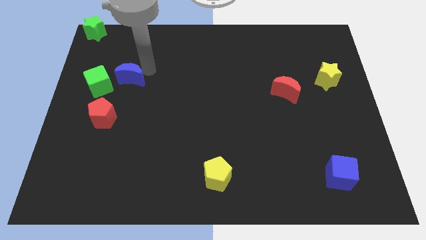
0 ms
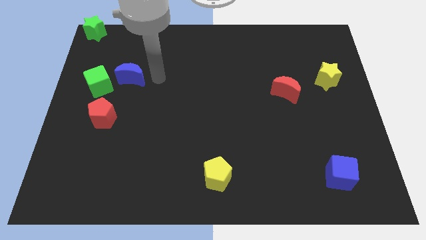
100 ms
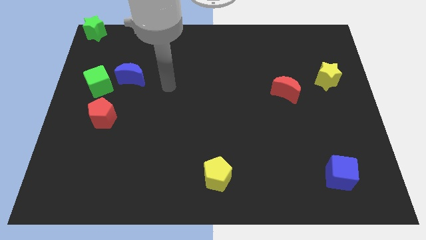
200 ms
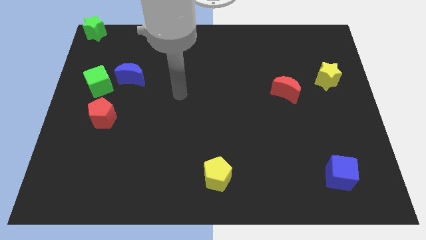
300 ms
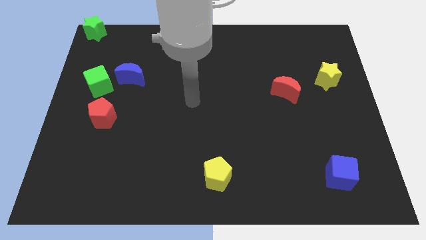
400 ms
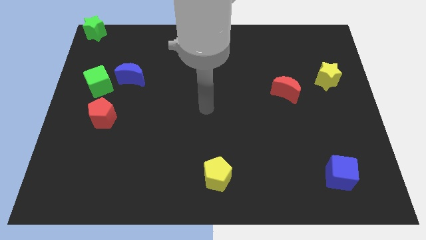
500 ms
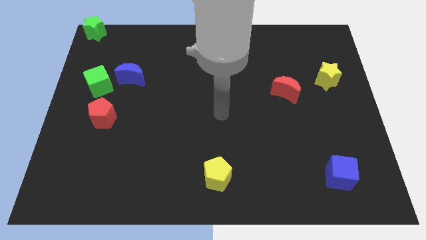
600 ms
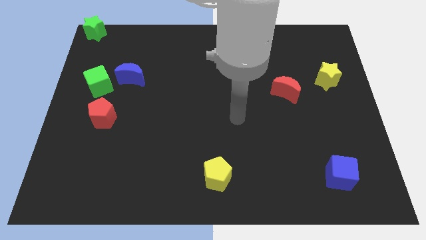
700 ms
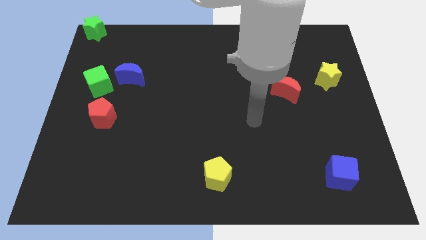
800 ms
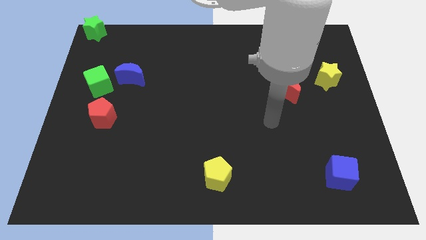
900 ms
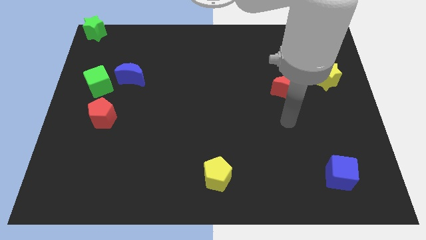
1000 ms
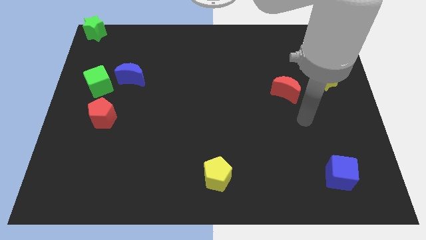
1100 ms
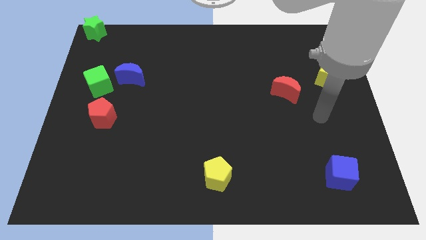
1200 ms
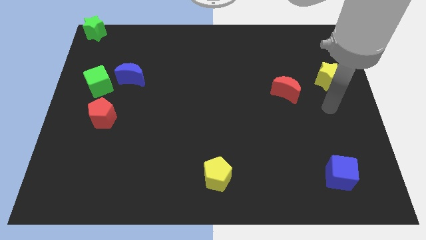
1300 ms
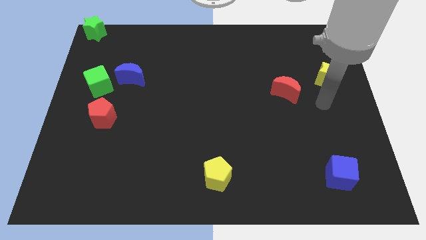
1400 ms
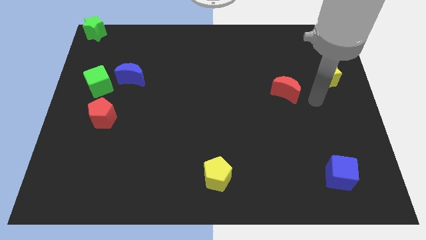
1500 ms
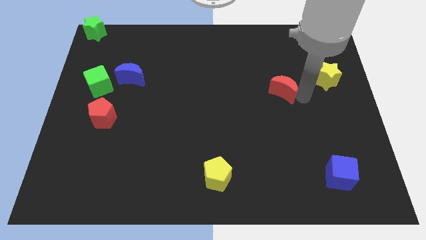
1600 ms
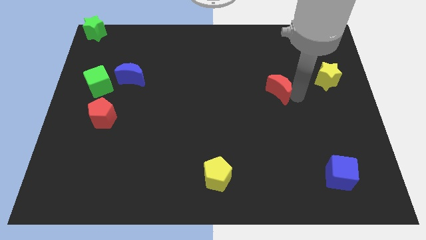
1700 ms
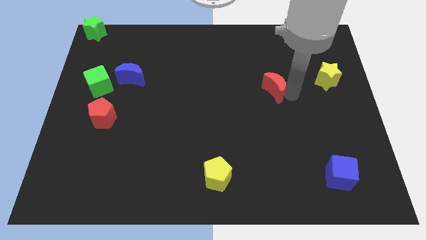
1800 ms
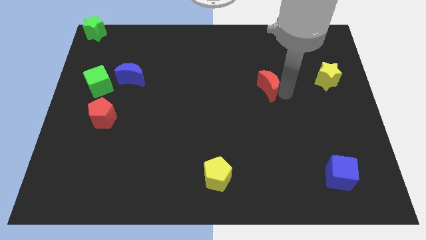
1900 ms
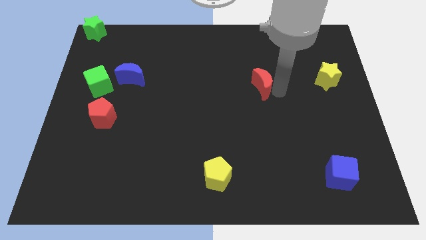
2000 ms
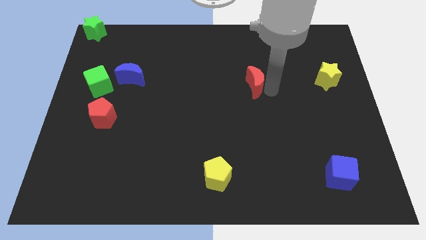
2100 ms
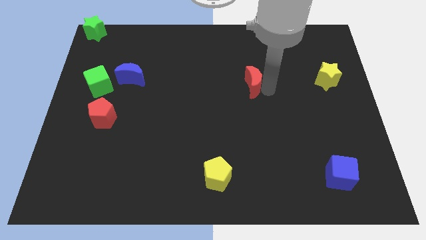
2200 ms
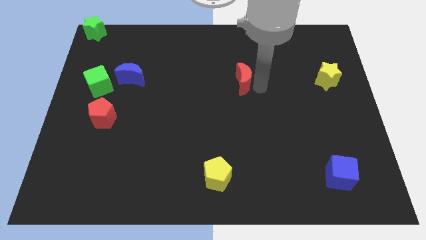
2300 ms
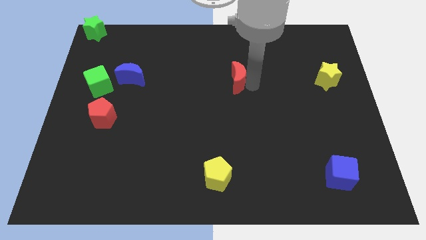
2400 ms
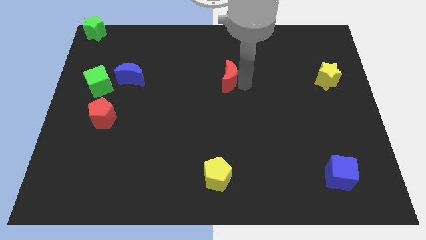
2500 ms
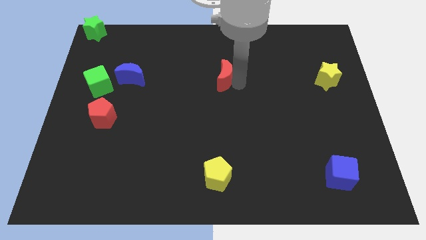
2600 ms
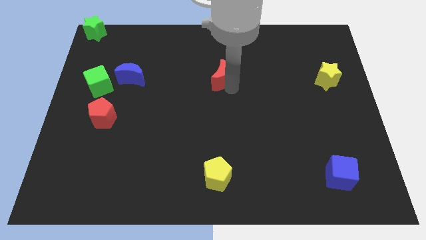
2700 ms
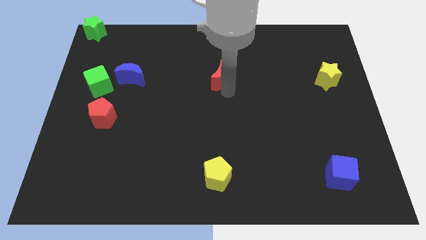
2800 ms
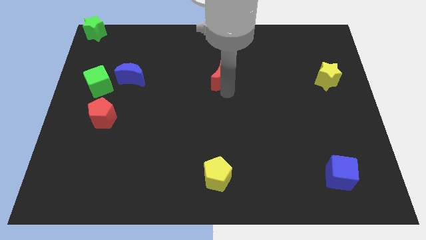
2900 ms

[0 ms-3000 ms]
push the red moon to the center of the board

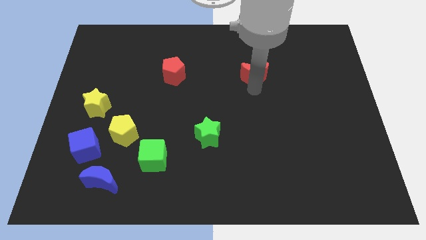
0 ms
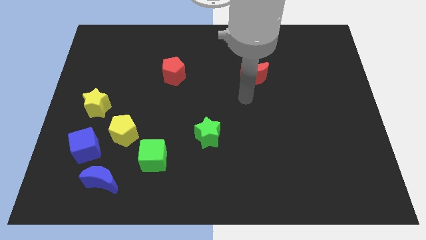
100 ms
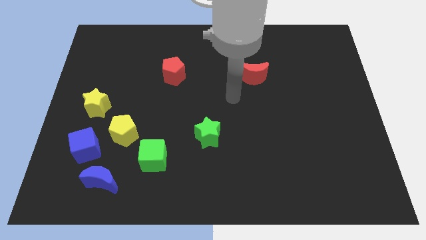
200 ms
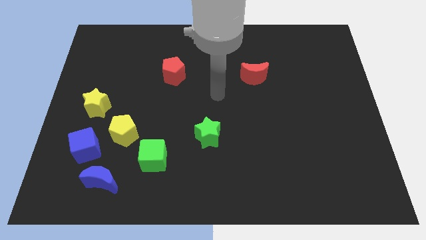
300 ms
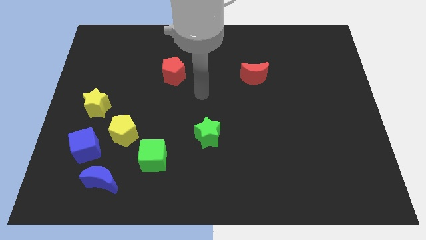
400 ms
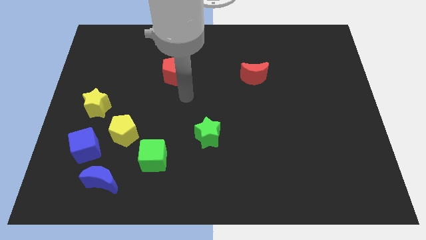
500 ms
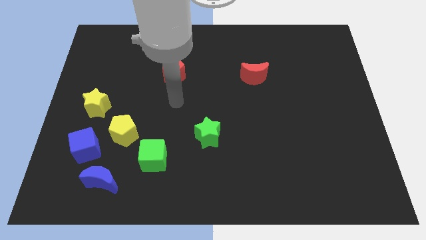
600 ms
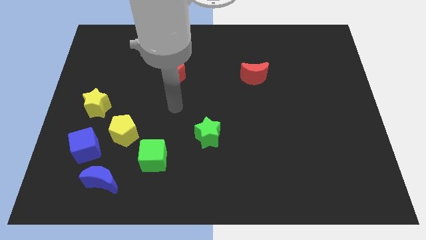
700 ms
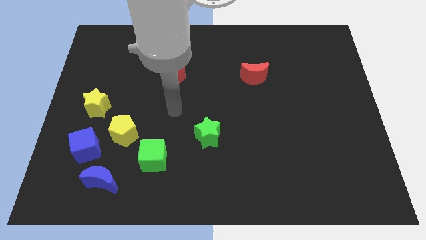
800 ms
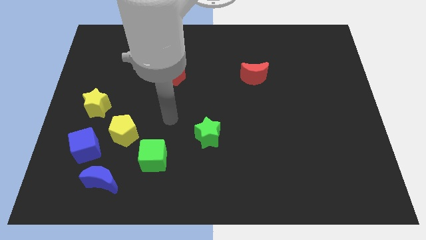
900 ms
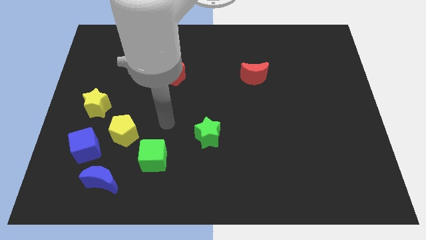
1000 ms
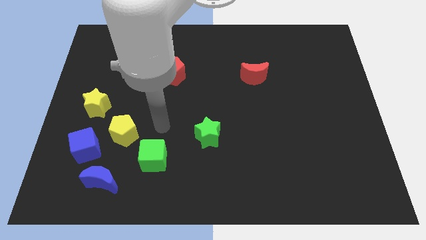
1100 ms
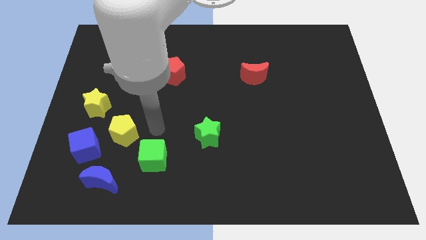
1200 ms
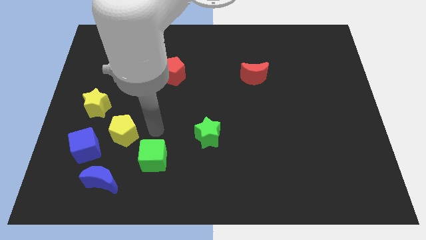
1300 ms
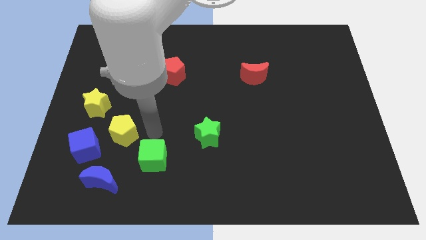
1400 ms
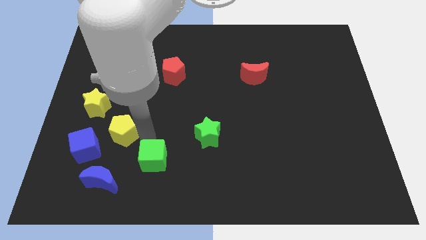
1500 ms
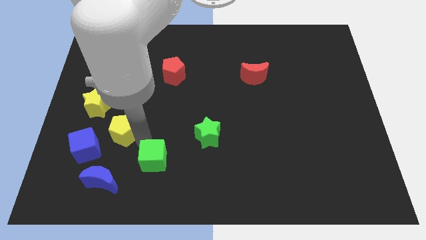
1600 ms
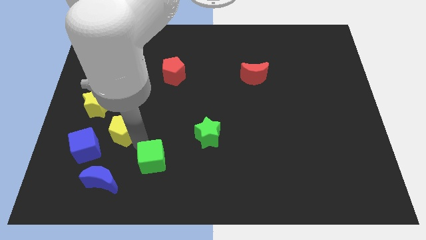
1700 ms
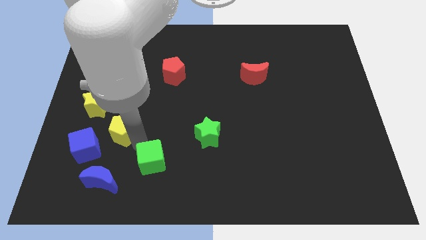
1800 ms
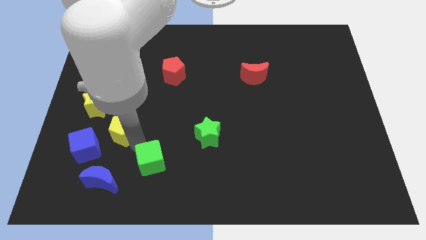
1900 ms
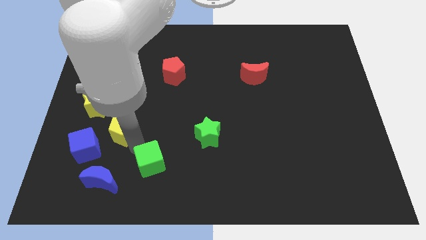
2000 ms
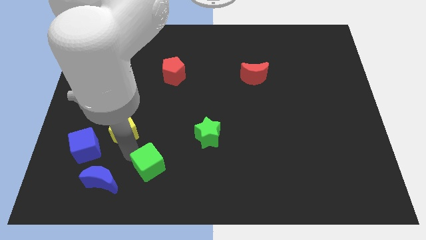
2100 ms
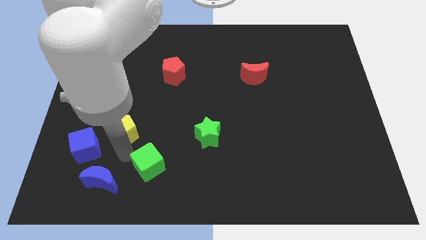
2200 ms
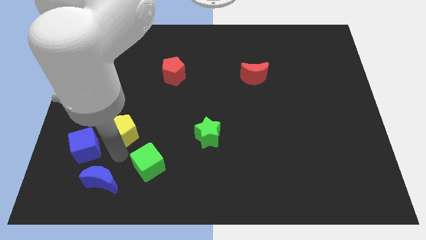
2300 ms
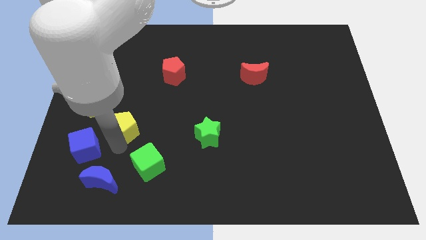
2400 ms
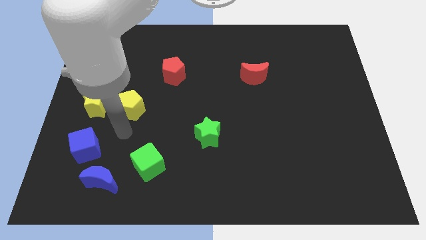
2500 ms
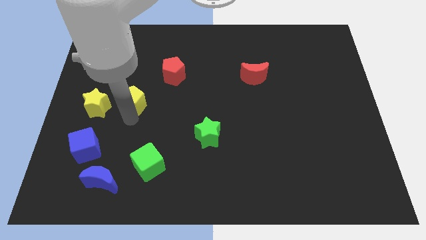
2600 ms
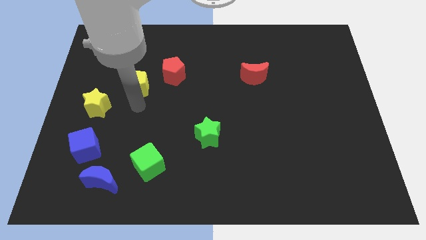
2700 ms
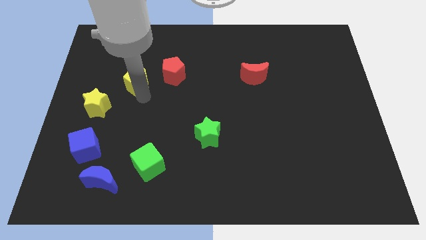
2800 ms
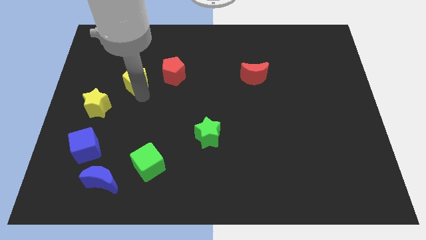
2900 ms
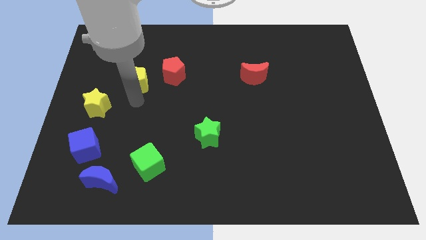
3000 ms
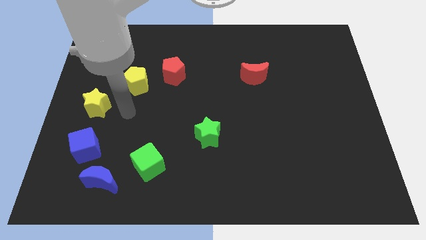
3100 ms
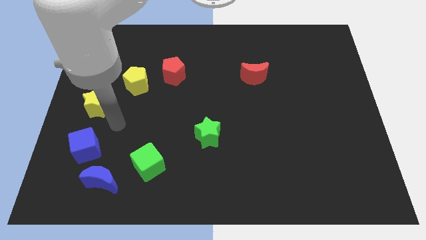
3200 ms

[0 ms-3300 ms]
move the green cube to the bottom

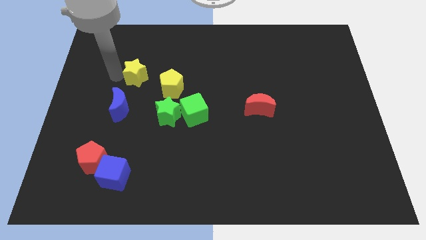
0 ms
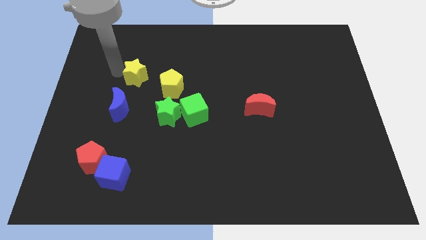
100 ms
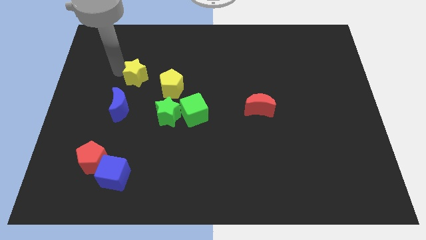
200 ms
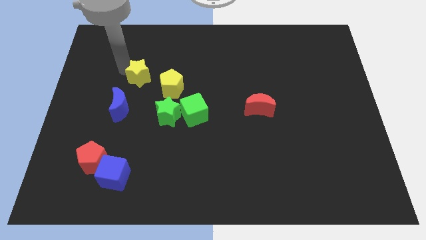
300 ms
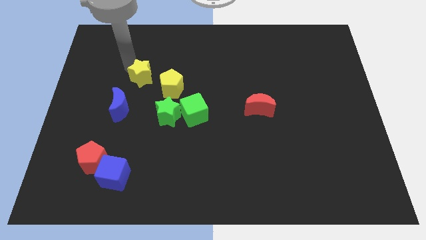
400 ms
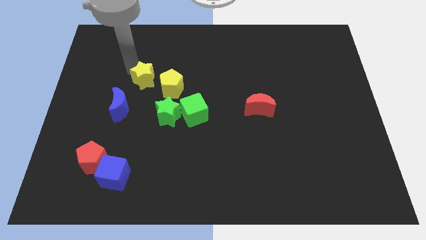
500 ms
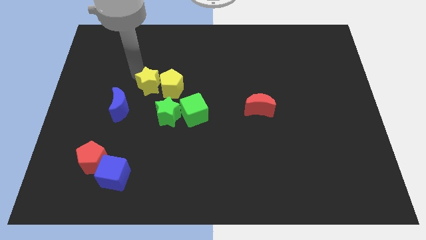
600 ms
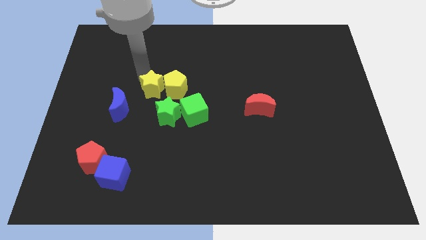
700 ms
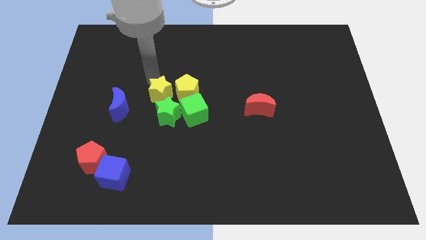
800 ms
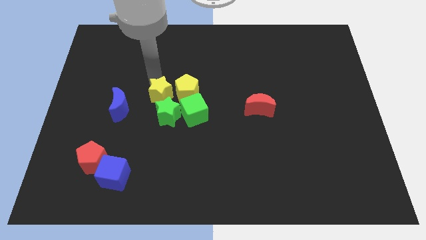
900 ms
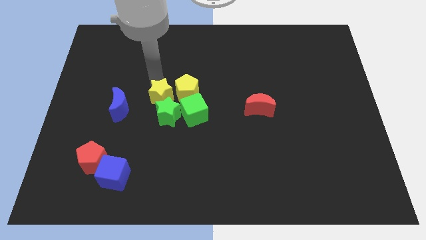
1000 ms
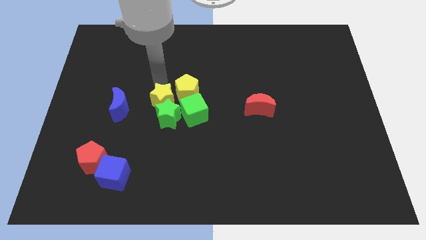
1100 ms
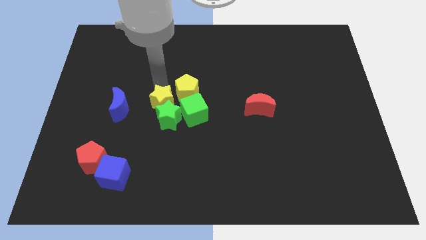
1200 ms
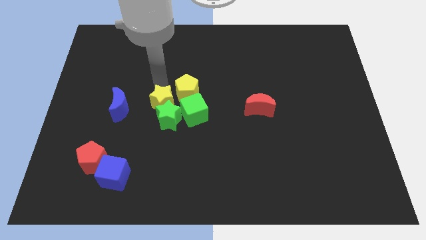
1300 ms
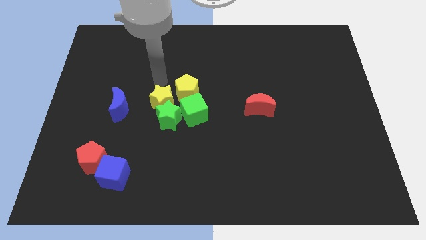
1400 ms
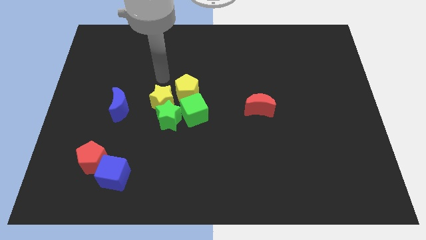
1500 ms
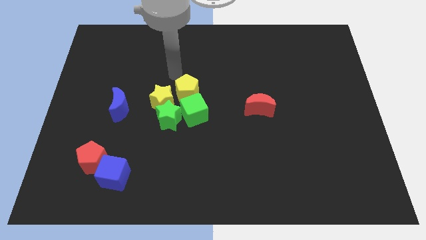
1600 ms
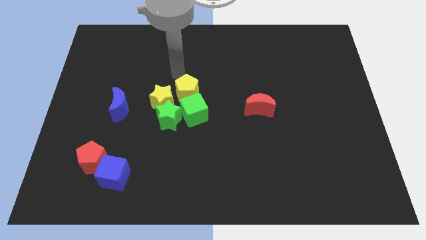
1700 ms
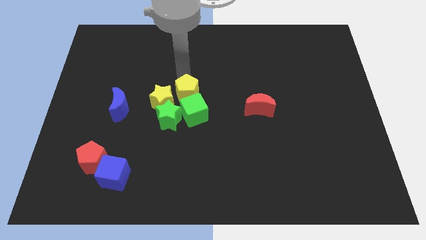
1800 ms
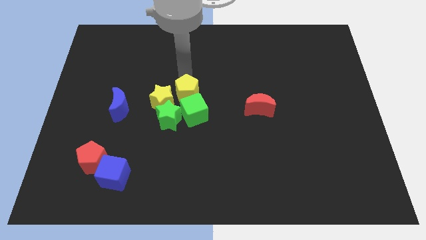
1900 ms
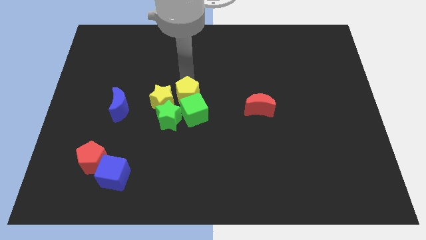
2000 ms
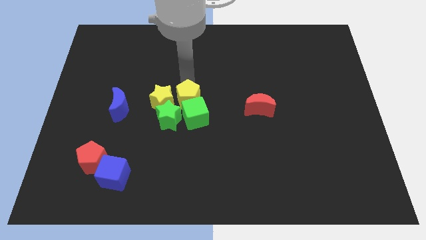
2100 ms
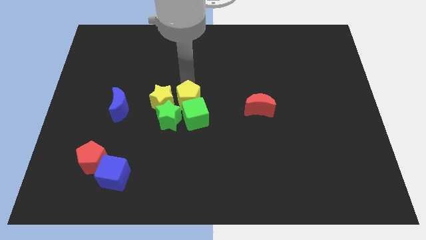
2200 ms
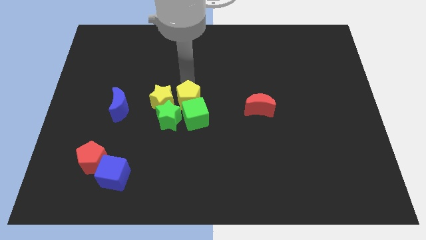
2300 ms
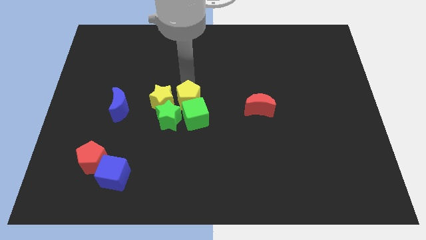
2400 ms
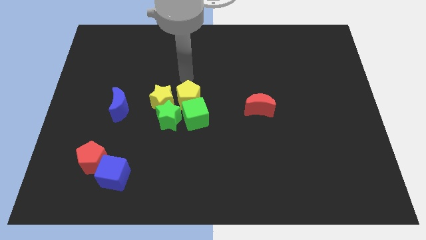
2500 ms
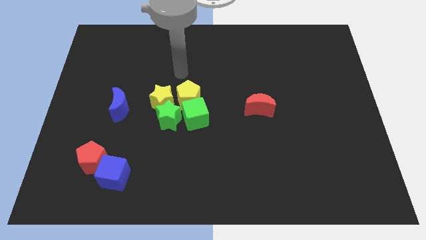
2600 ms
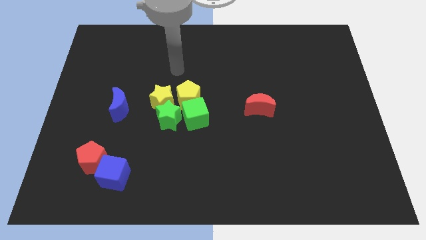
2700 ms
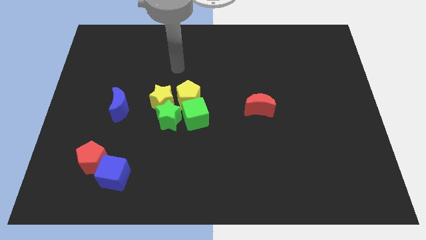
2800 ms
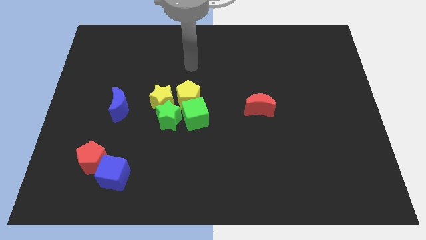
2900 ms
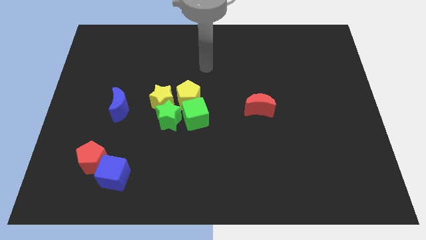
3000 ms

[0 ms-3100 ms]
slide yellow blocks into green blocks
